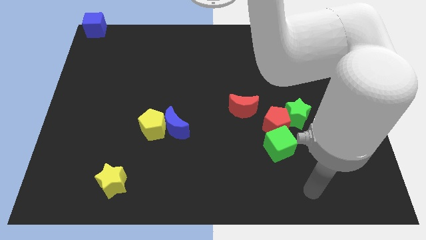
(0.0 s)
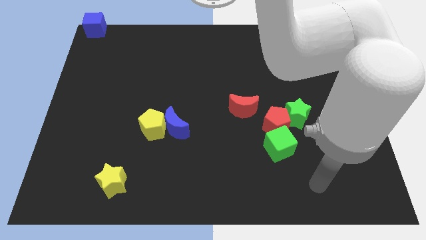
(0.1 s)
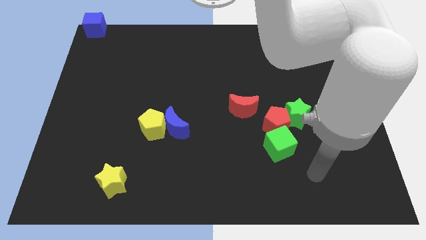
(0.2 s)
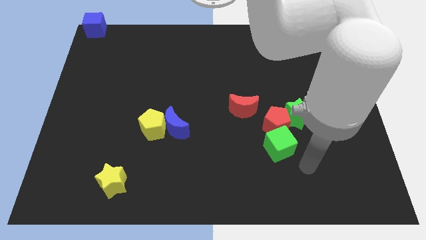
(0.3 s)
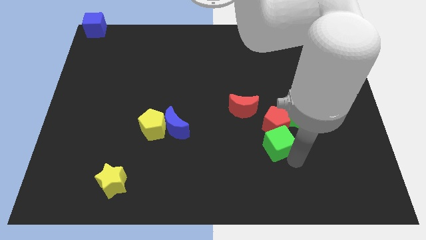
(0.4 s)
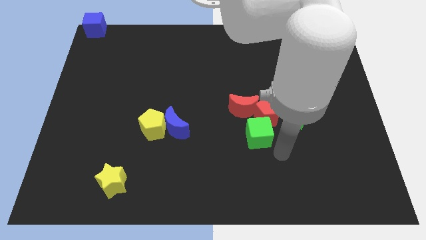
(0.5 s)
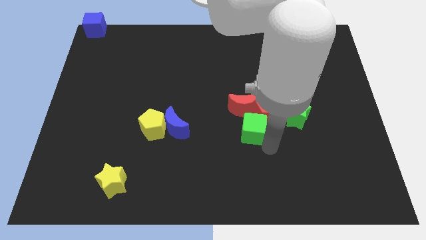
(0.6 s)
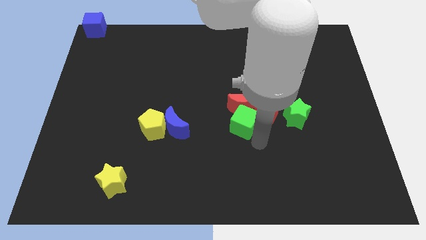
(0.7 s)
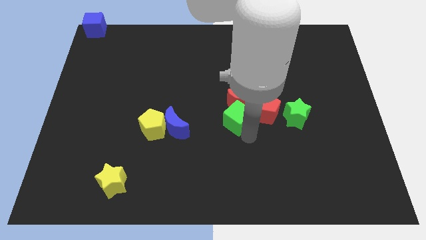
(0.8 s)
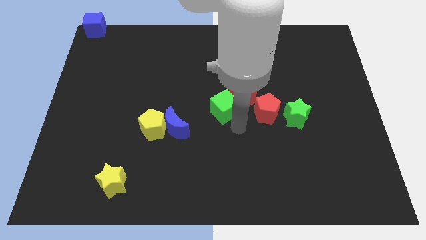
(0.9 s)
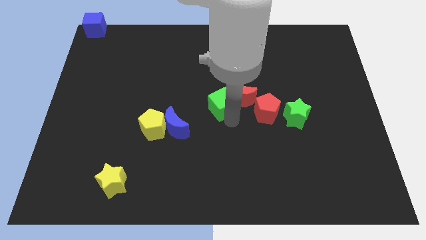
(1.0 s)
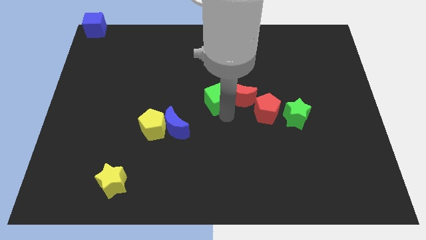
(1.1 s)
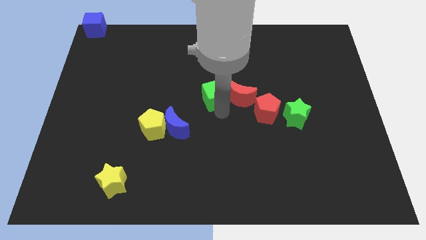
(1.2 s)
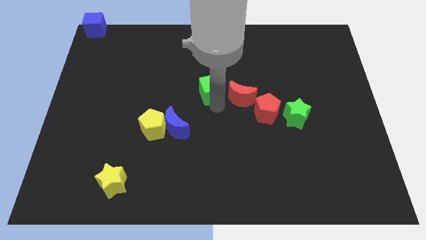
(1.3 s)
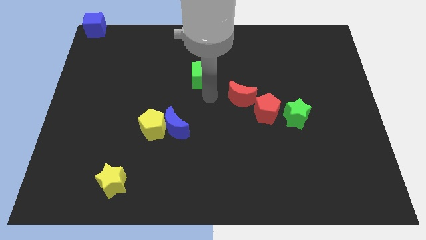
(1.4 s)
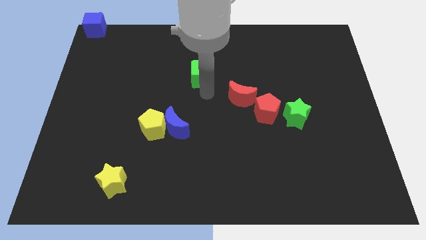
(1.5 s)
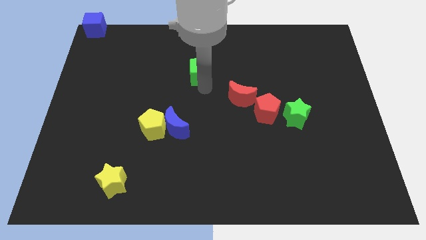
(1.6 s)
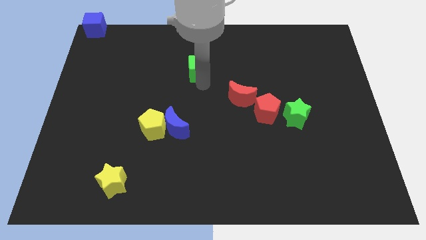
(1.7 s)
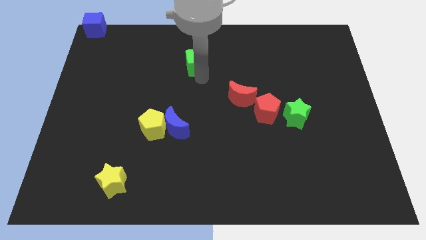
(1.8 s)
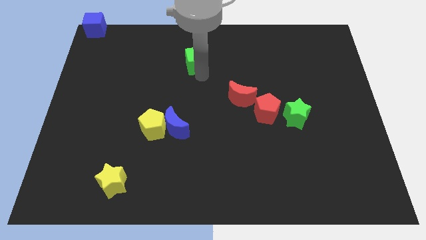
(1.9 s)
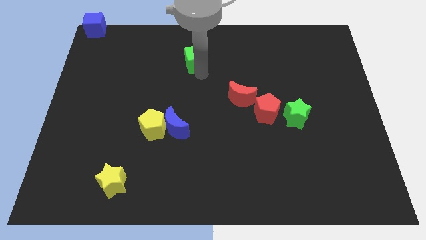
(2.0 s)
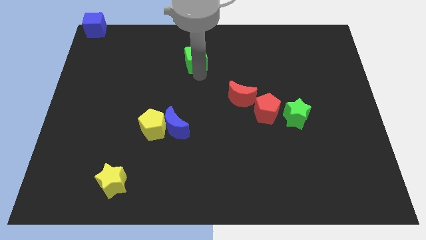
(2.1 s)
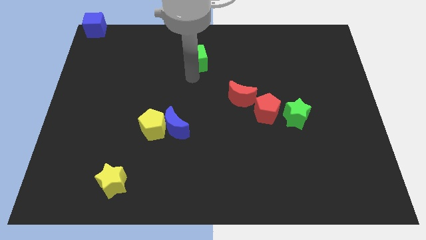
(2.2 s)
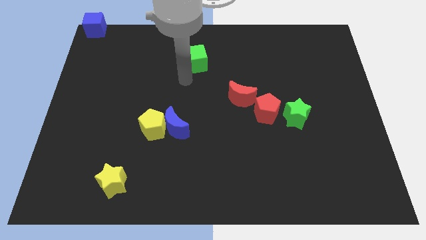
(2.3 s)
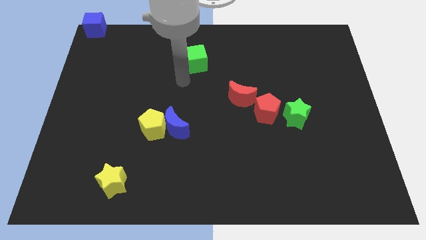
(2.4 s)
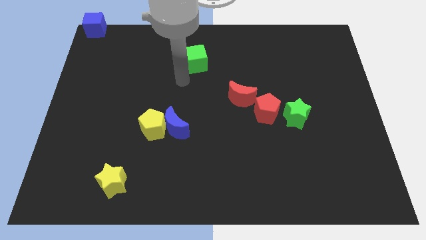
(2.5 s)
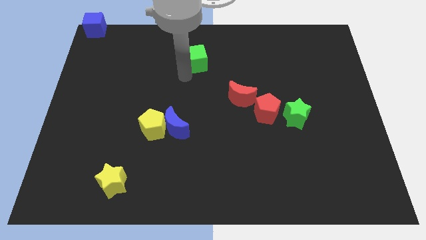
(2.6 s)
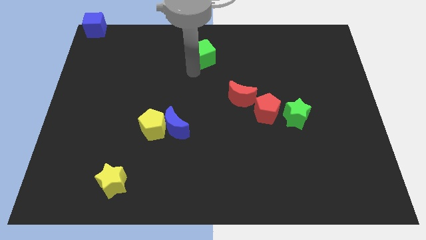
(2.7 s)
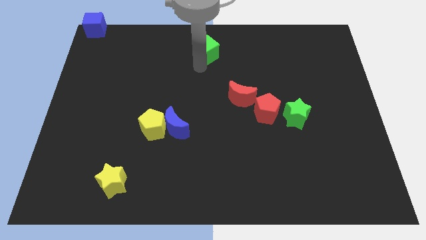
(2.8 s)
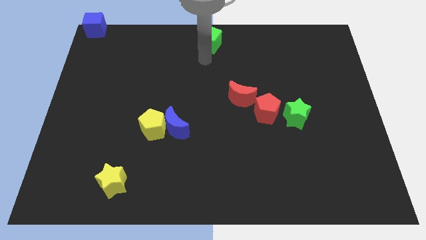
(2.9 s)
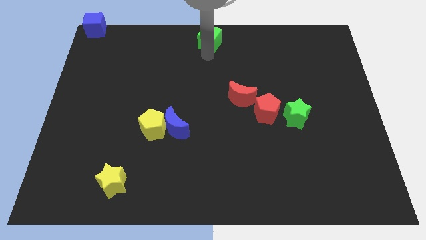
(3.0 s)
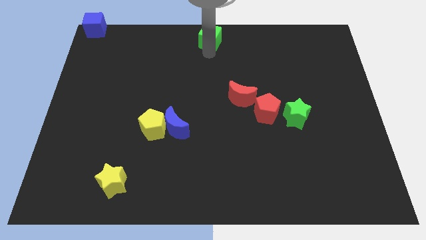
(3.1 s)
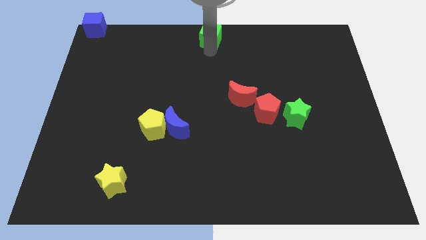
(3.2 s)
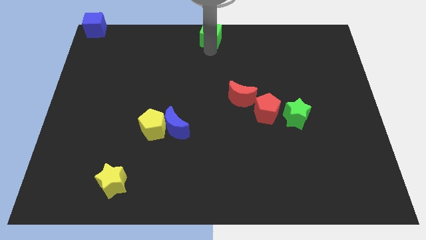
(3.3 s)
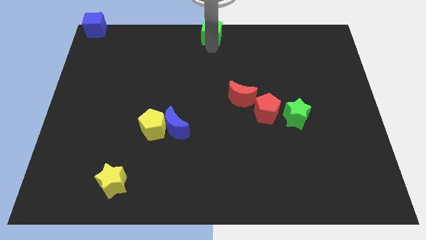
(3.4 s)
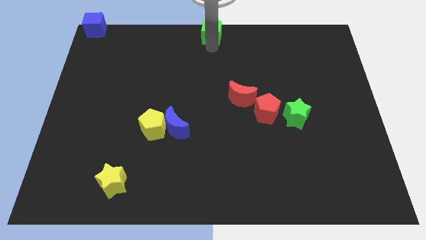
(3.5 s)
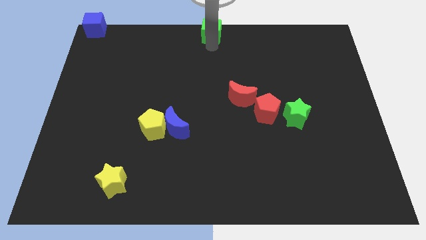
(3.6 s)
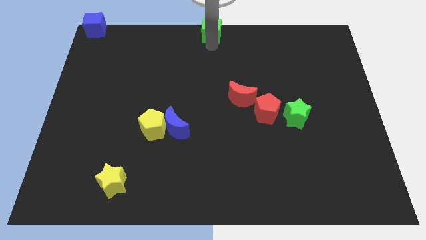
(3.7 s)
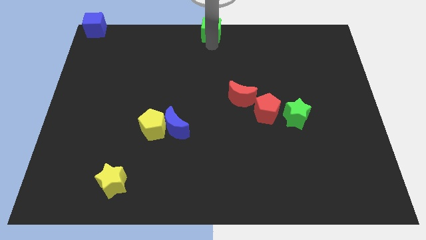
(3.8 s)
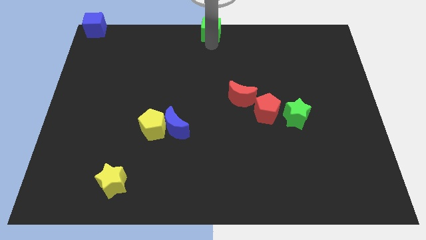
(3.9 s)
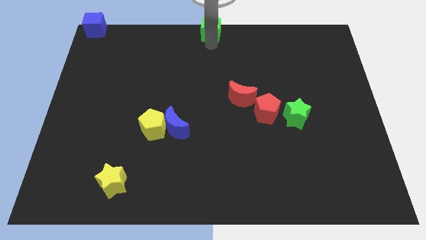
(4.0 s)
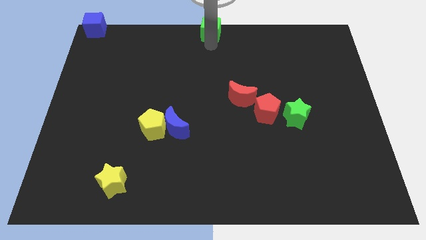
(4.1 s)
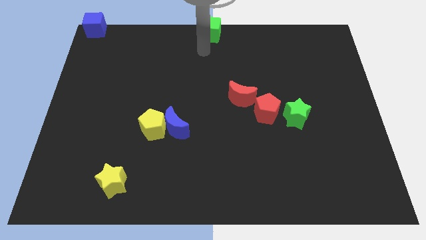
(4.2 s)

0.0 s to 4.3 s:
push the green cube to the top center

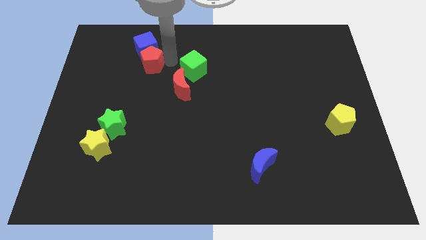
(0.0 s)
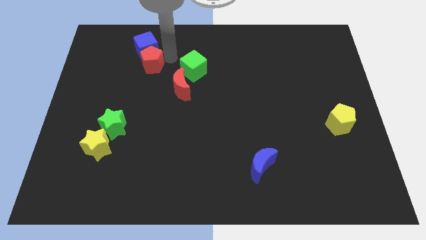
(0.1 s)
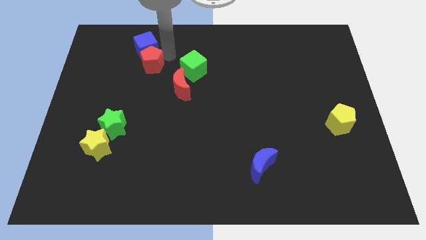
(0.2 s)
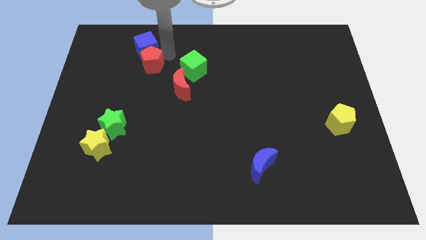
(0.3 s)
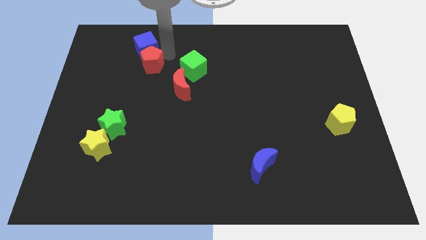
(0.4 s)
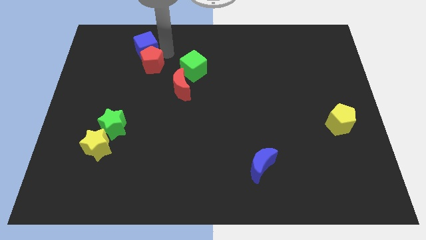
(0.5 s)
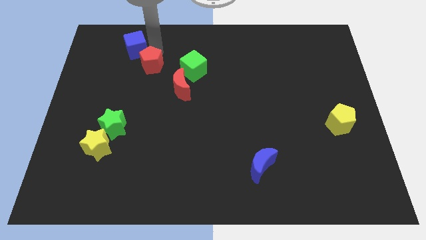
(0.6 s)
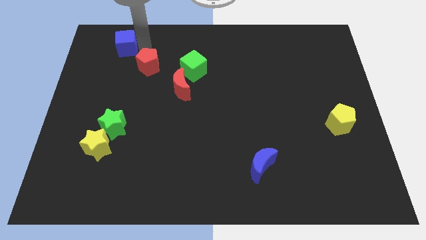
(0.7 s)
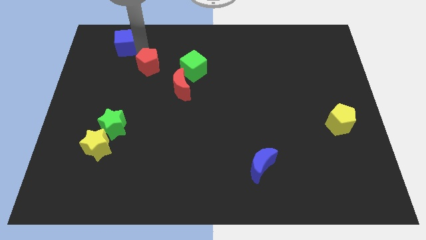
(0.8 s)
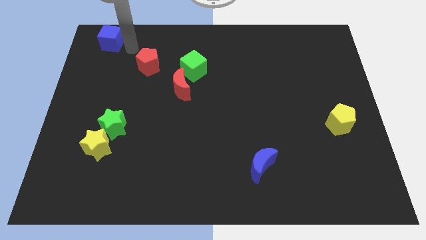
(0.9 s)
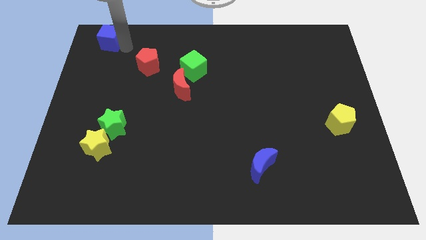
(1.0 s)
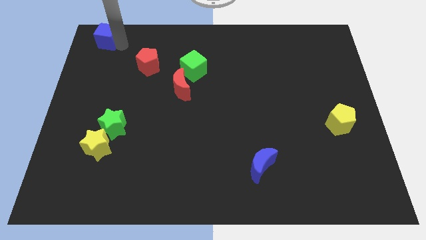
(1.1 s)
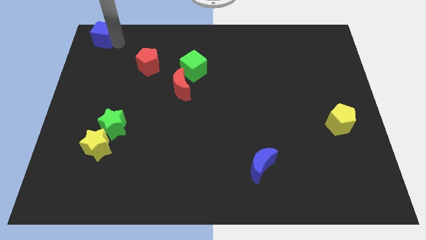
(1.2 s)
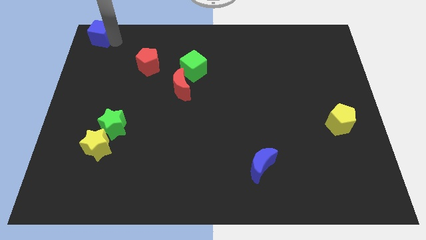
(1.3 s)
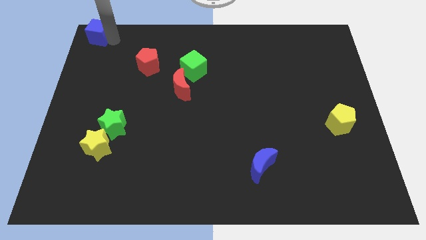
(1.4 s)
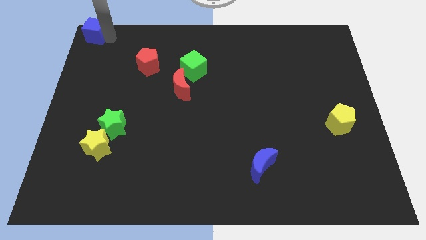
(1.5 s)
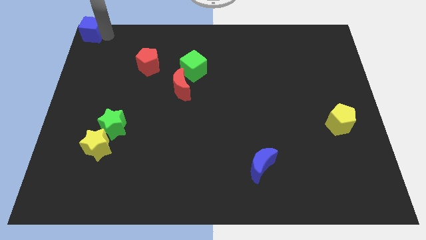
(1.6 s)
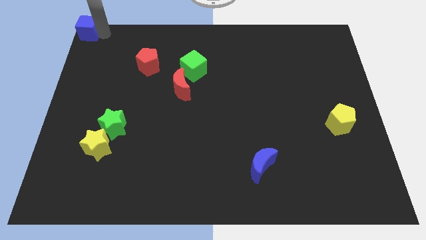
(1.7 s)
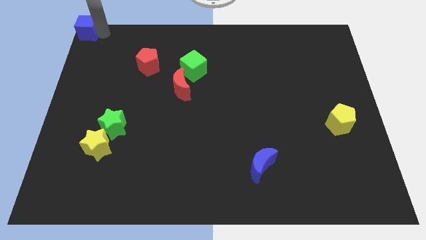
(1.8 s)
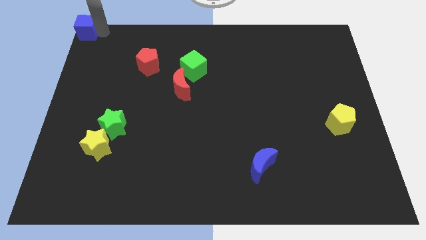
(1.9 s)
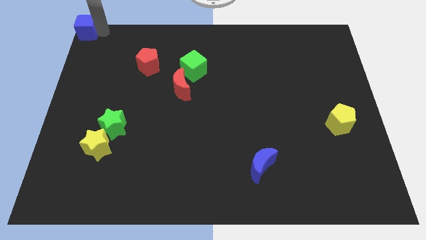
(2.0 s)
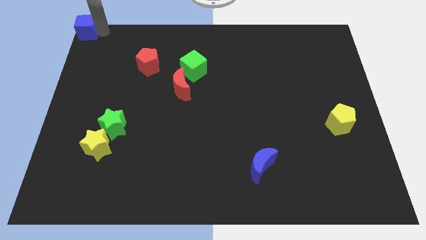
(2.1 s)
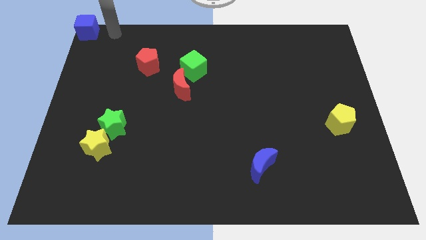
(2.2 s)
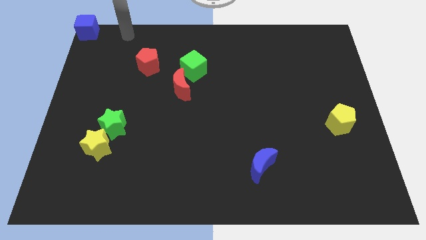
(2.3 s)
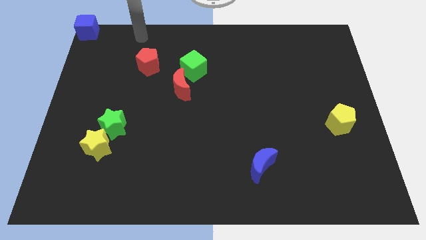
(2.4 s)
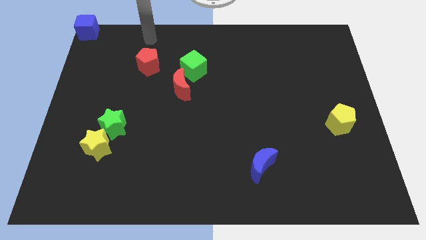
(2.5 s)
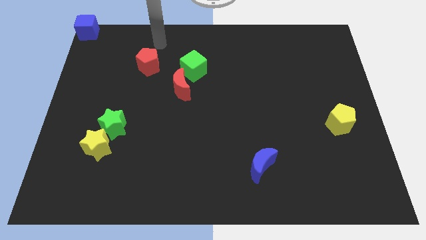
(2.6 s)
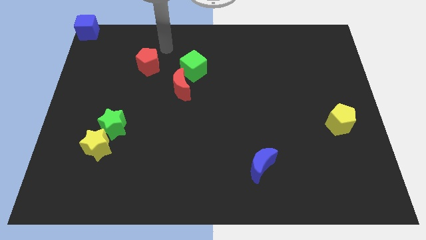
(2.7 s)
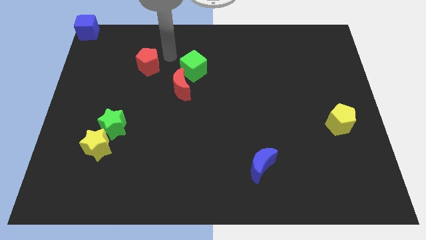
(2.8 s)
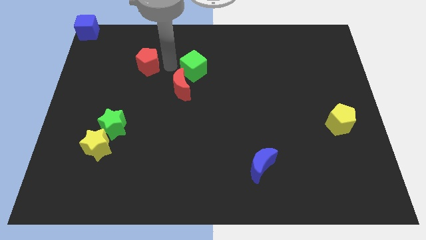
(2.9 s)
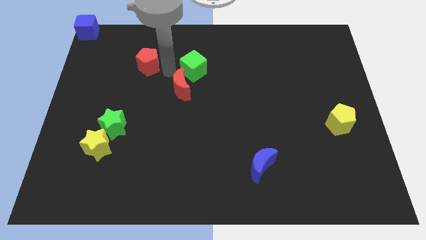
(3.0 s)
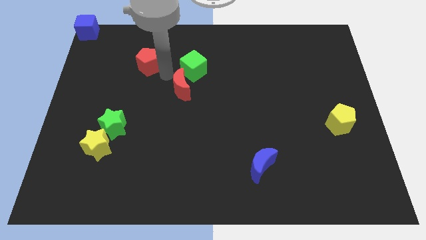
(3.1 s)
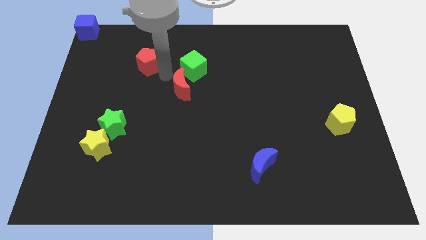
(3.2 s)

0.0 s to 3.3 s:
place blue cube left top corner of the board

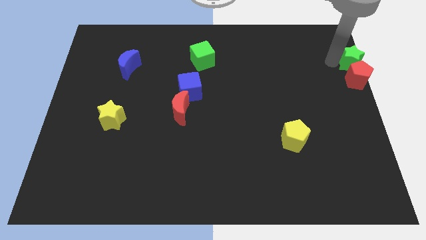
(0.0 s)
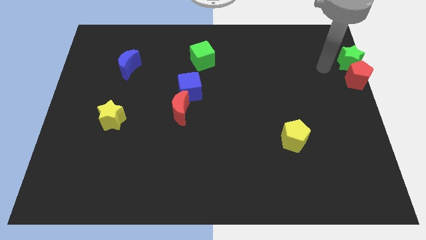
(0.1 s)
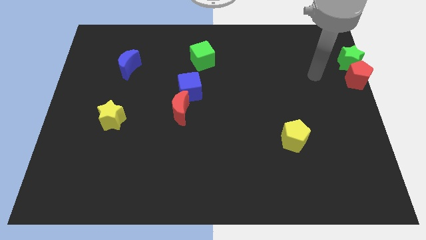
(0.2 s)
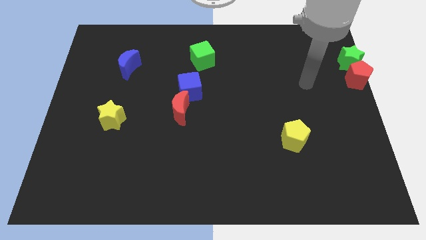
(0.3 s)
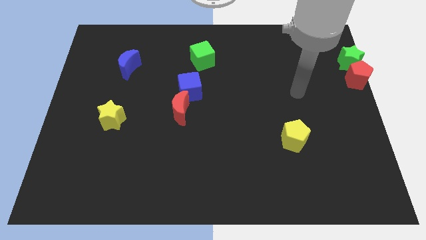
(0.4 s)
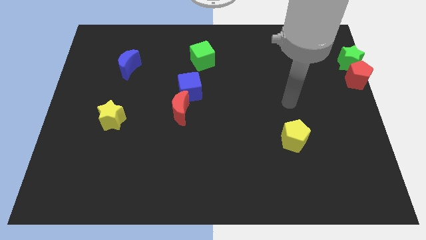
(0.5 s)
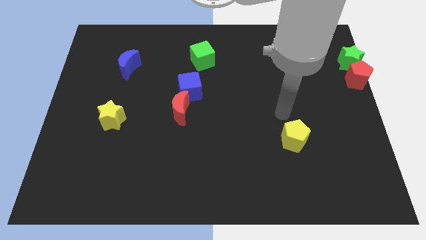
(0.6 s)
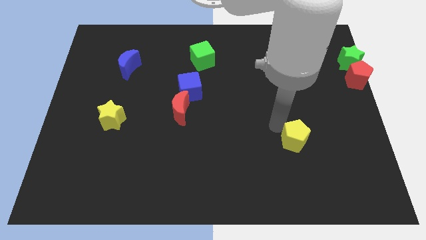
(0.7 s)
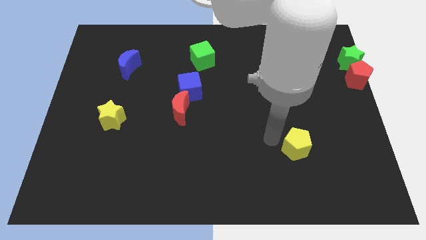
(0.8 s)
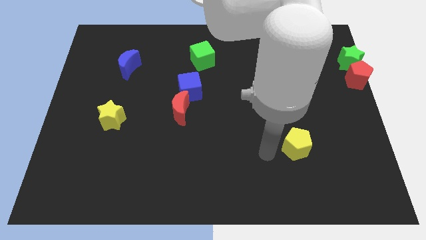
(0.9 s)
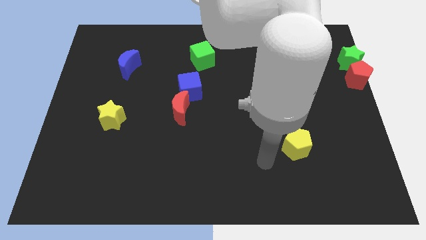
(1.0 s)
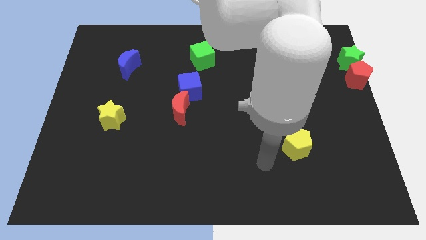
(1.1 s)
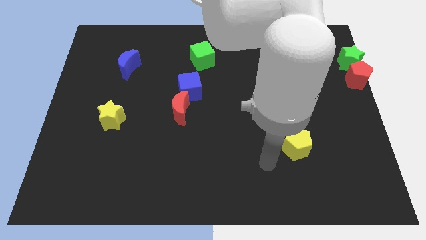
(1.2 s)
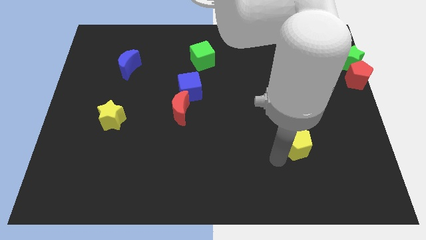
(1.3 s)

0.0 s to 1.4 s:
place the arm diagonally to the yellow pentagon
